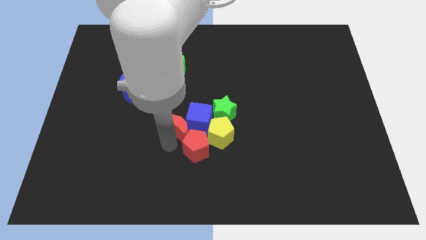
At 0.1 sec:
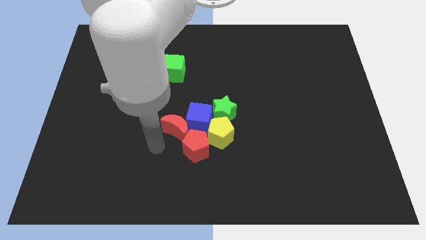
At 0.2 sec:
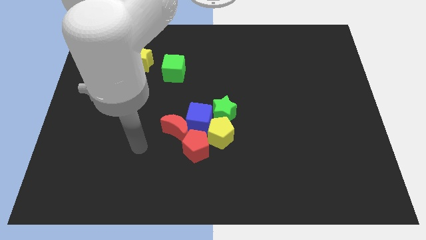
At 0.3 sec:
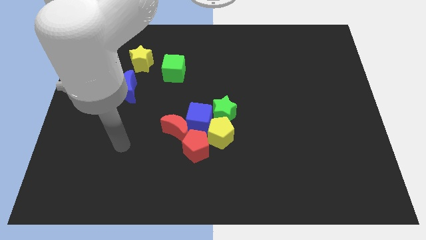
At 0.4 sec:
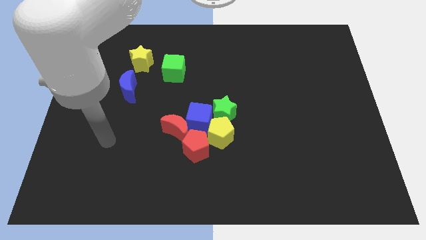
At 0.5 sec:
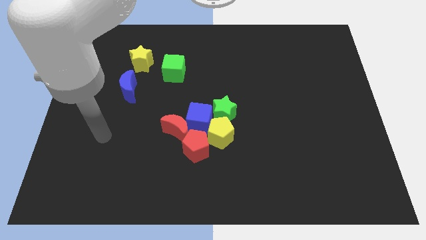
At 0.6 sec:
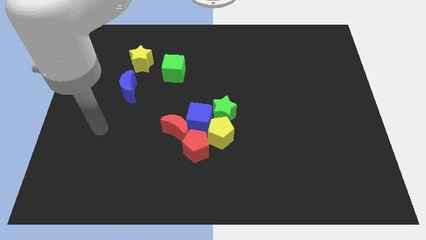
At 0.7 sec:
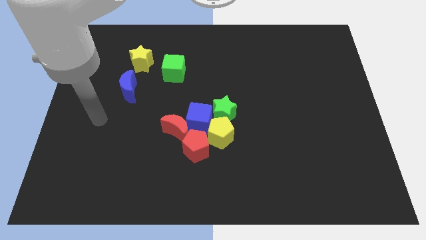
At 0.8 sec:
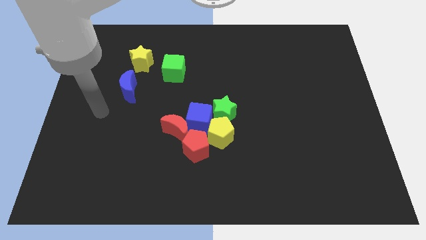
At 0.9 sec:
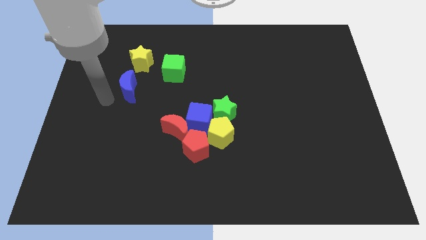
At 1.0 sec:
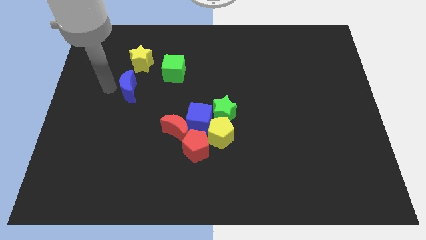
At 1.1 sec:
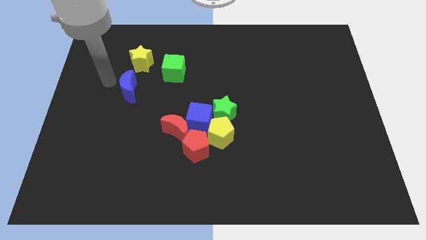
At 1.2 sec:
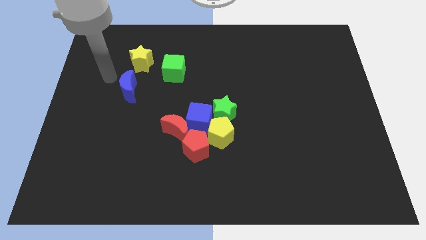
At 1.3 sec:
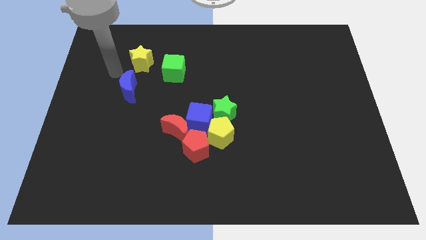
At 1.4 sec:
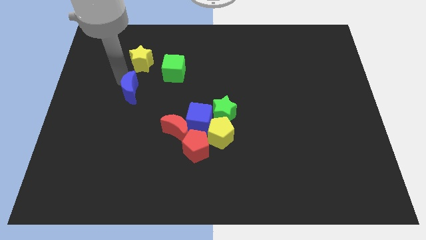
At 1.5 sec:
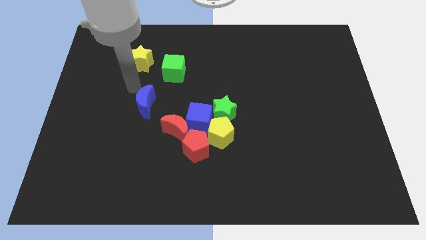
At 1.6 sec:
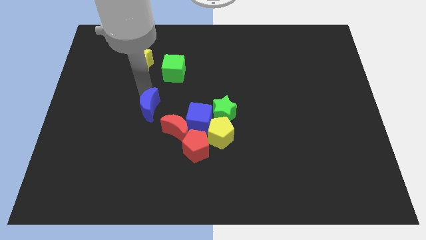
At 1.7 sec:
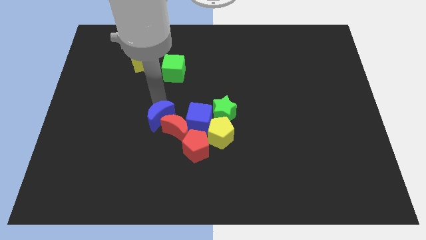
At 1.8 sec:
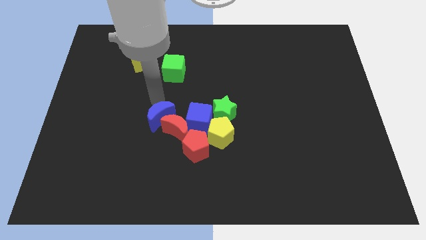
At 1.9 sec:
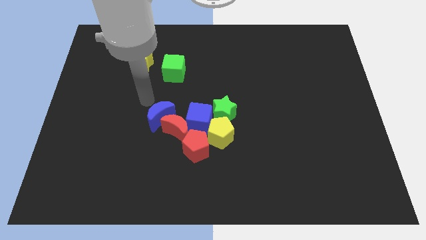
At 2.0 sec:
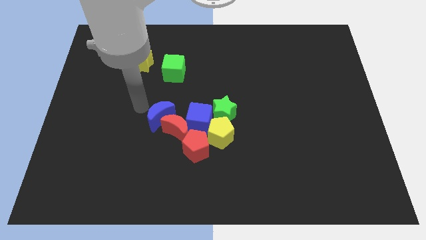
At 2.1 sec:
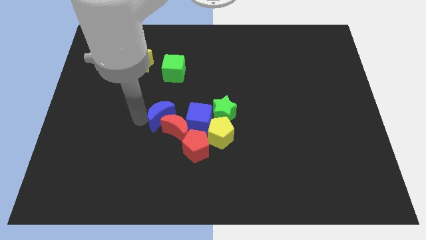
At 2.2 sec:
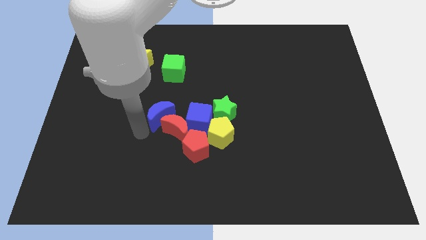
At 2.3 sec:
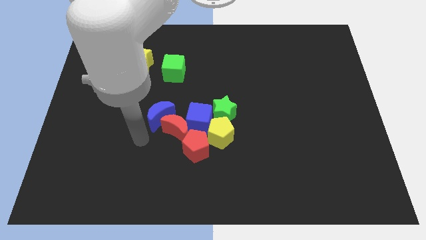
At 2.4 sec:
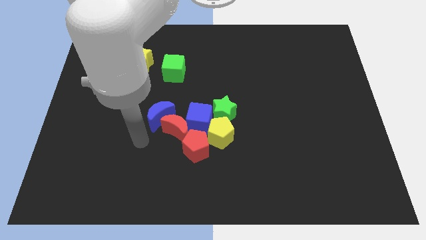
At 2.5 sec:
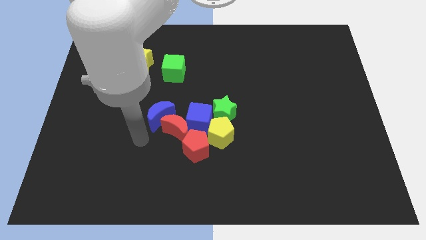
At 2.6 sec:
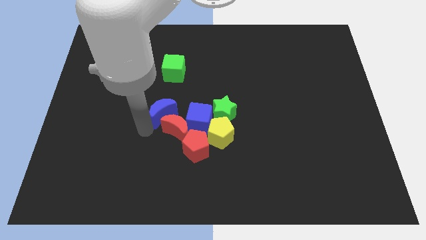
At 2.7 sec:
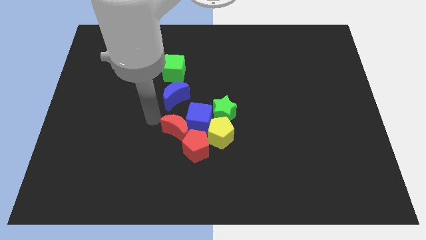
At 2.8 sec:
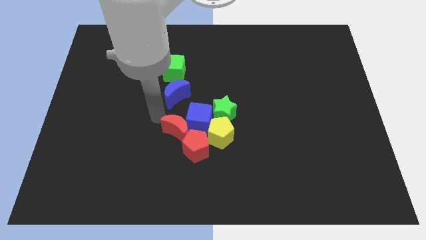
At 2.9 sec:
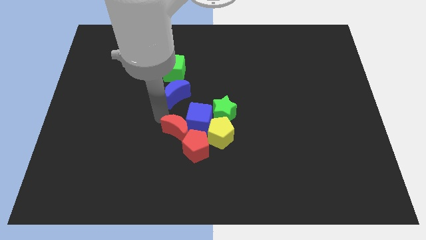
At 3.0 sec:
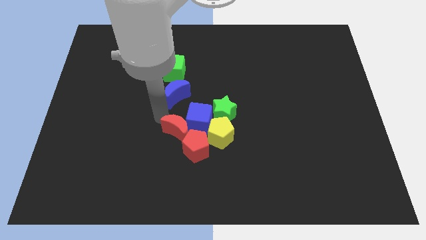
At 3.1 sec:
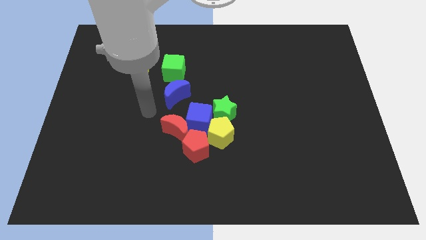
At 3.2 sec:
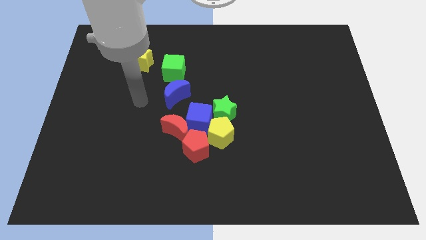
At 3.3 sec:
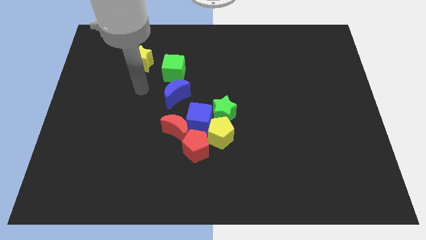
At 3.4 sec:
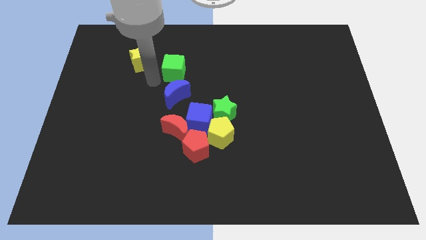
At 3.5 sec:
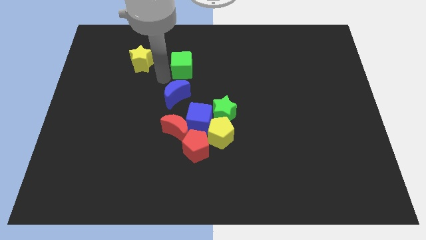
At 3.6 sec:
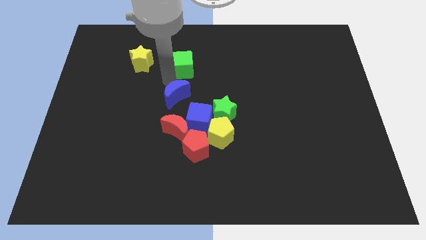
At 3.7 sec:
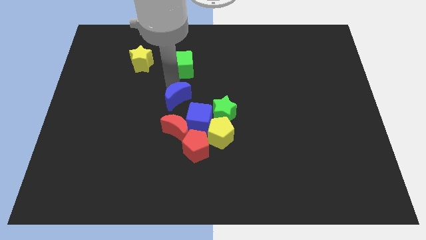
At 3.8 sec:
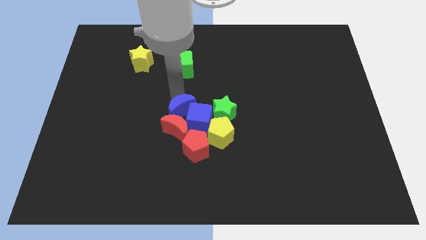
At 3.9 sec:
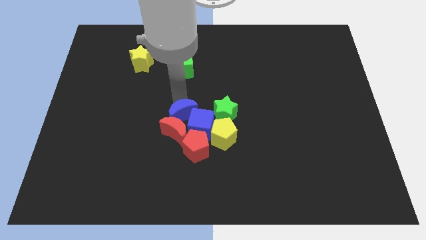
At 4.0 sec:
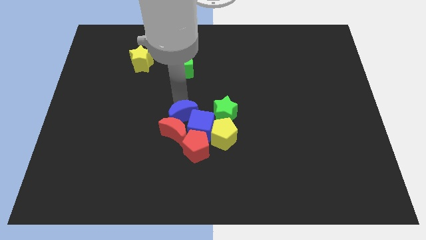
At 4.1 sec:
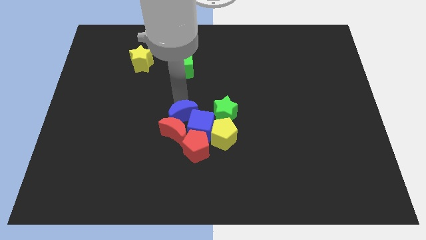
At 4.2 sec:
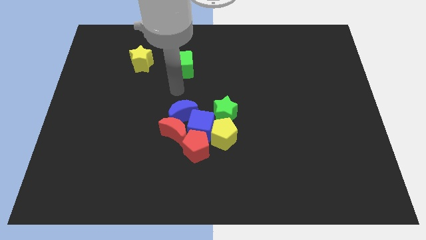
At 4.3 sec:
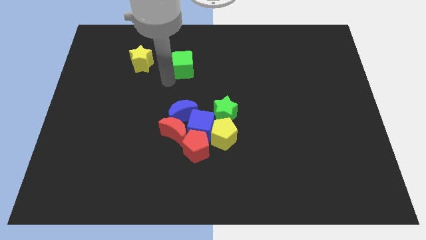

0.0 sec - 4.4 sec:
push the blue crescent to the top of the blue cube

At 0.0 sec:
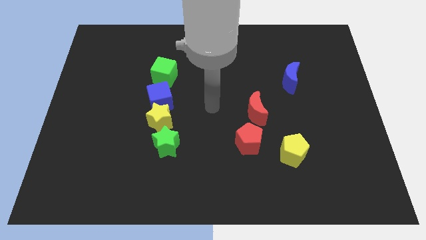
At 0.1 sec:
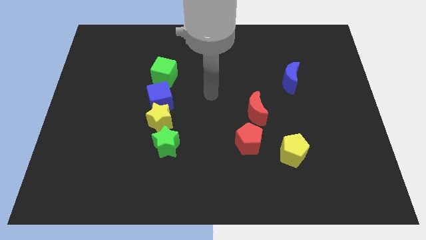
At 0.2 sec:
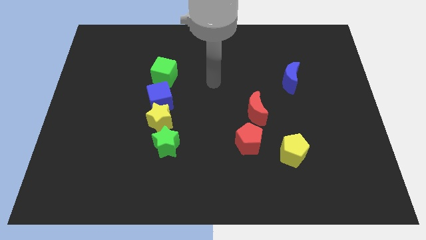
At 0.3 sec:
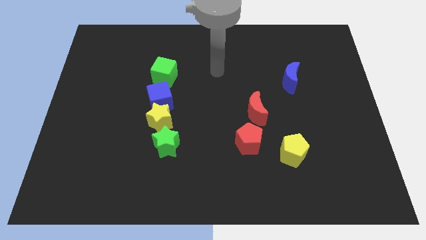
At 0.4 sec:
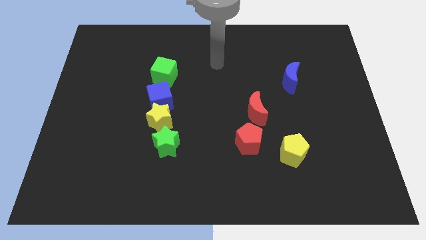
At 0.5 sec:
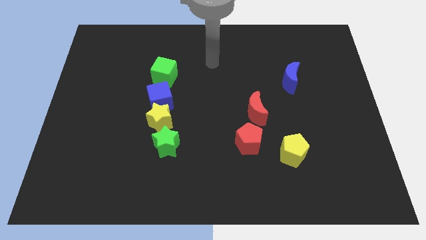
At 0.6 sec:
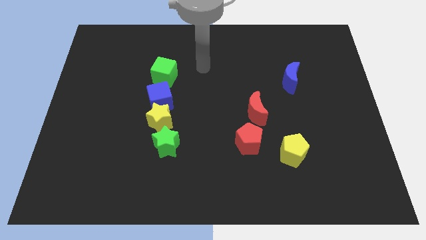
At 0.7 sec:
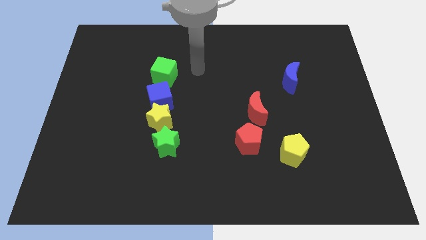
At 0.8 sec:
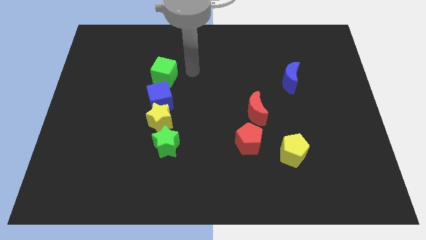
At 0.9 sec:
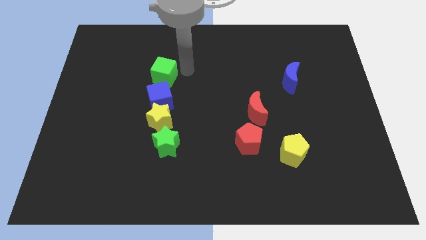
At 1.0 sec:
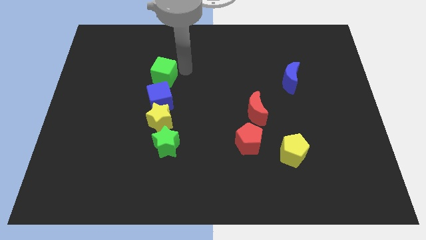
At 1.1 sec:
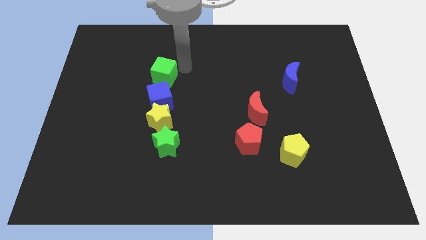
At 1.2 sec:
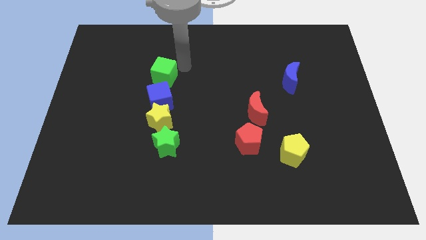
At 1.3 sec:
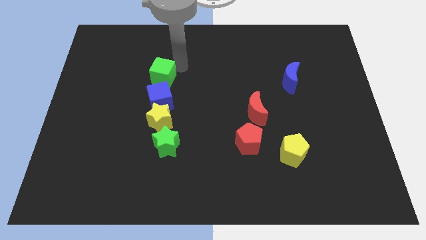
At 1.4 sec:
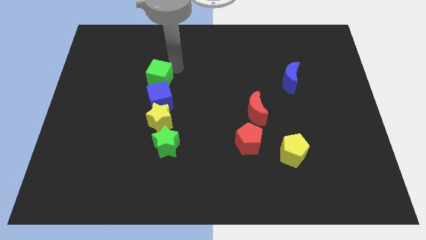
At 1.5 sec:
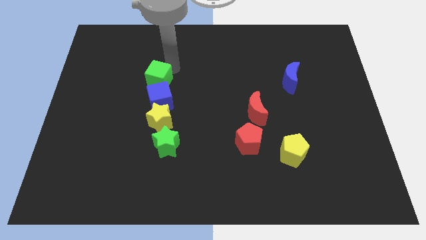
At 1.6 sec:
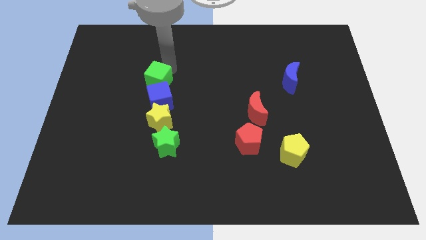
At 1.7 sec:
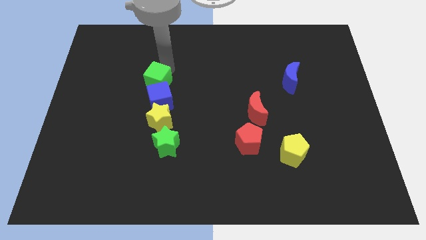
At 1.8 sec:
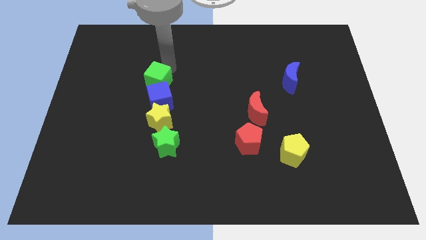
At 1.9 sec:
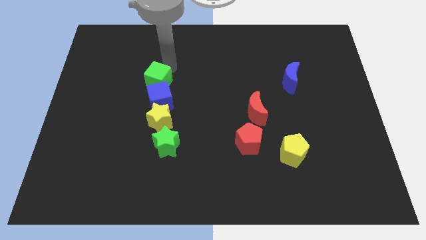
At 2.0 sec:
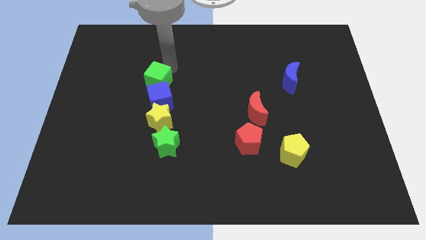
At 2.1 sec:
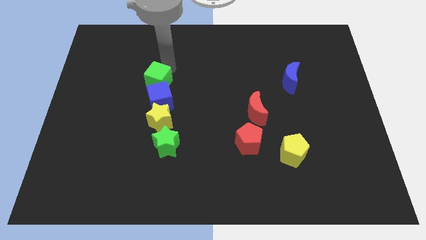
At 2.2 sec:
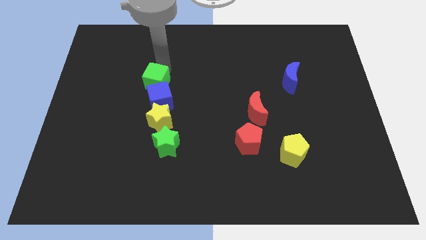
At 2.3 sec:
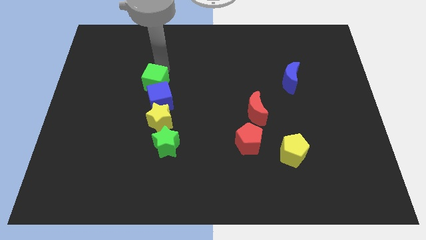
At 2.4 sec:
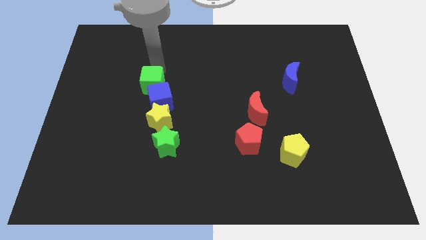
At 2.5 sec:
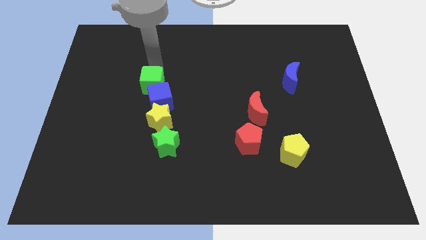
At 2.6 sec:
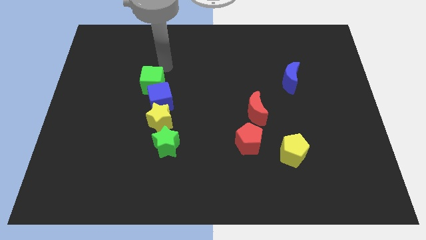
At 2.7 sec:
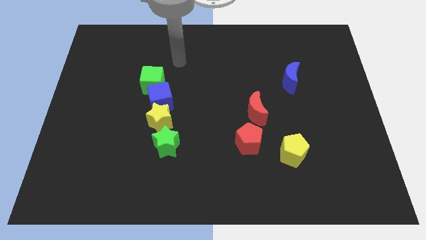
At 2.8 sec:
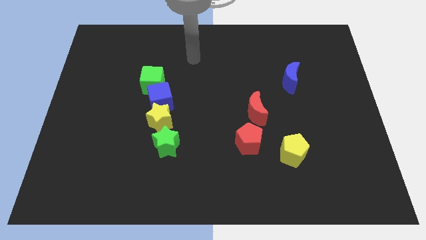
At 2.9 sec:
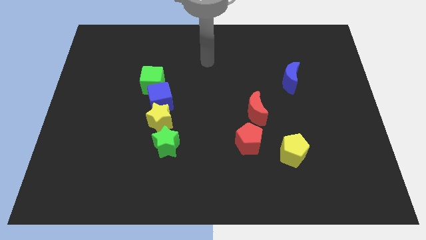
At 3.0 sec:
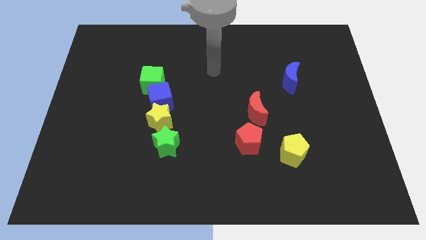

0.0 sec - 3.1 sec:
move green cube slightly to left

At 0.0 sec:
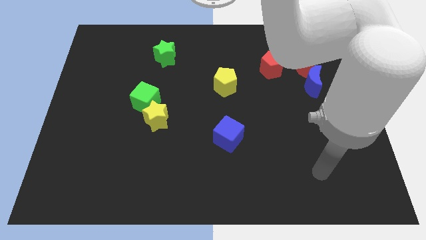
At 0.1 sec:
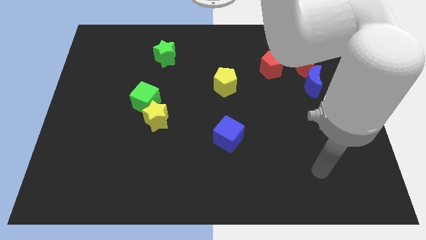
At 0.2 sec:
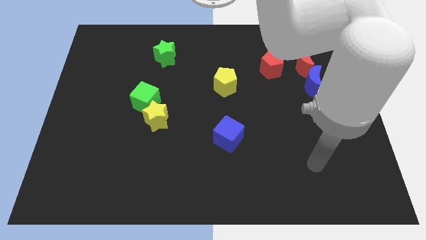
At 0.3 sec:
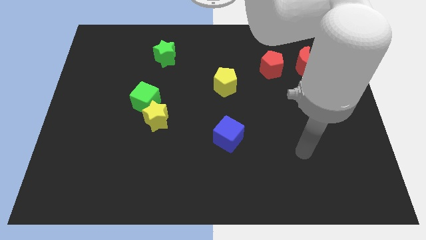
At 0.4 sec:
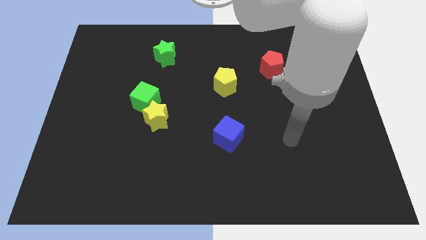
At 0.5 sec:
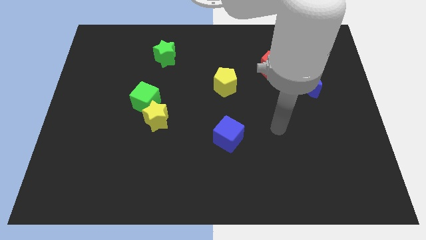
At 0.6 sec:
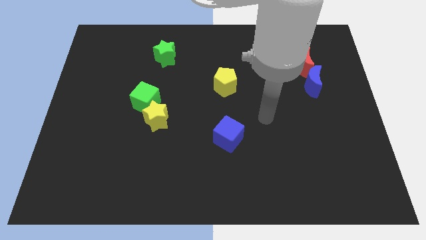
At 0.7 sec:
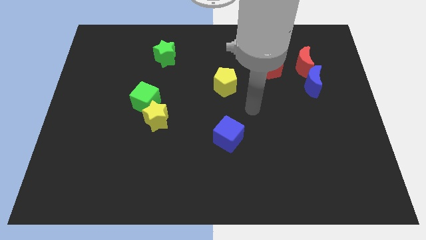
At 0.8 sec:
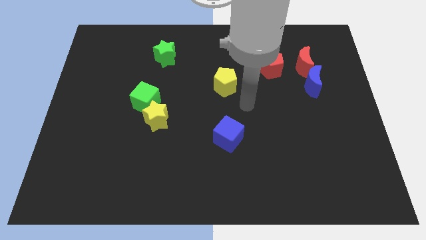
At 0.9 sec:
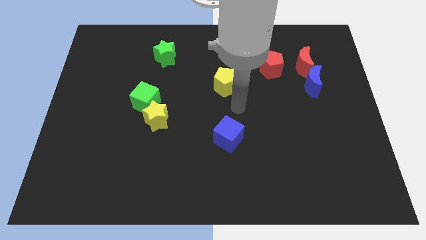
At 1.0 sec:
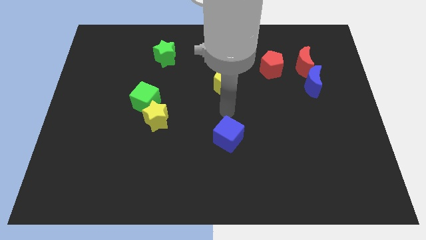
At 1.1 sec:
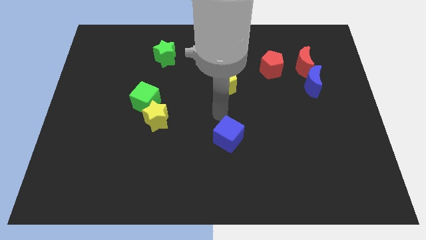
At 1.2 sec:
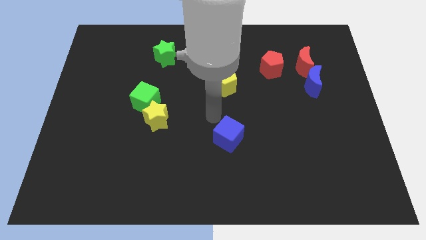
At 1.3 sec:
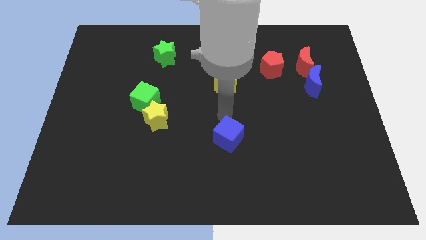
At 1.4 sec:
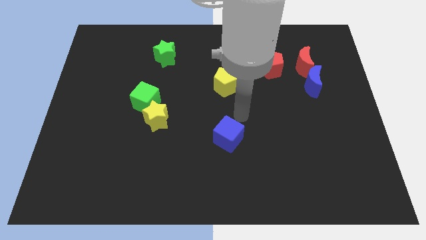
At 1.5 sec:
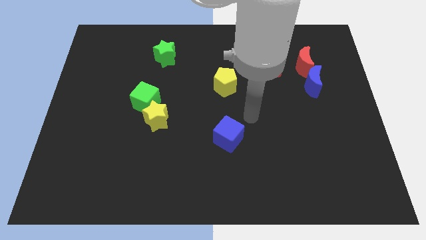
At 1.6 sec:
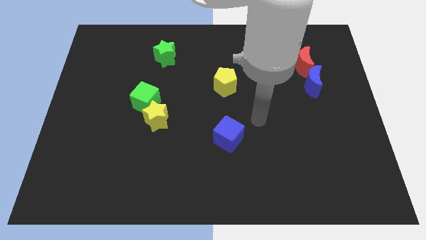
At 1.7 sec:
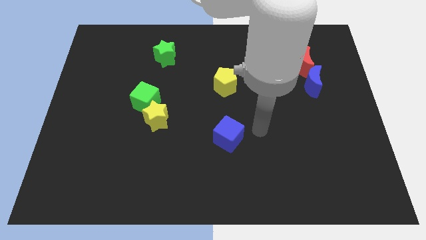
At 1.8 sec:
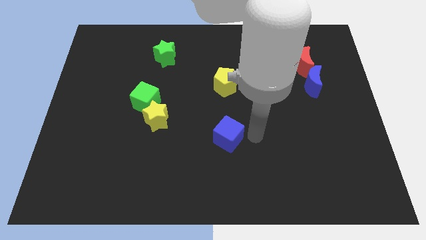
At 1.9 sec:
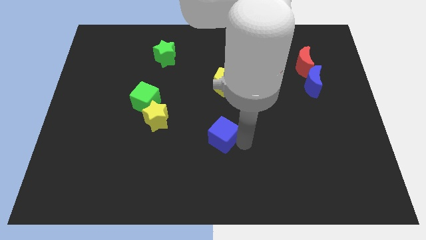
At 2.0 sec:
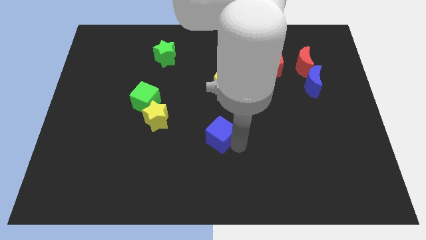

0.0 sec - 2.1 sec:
push the blue cube to the bottom right of yellow star
